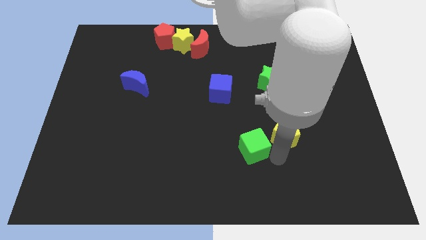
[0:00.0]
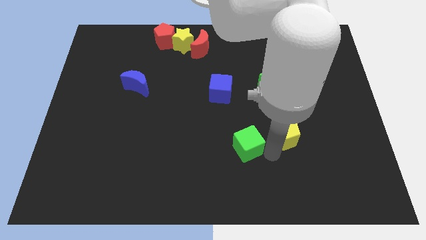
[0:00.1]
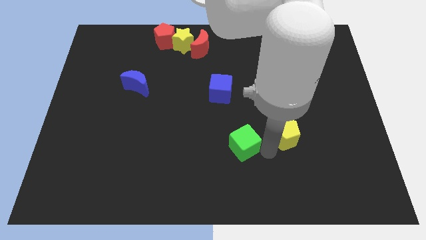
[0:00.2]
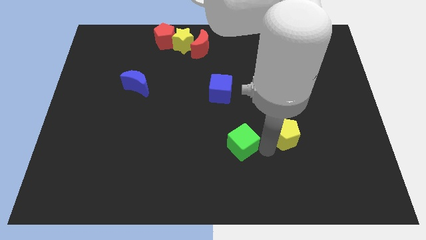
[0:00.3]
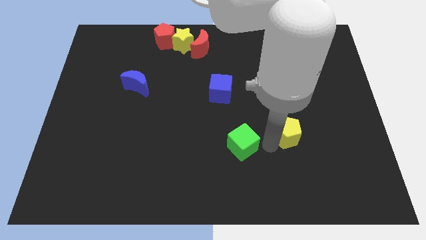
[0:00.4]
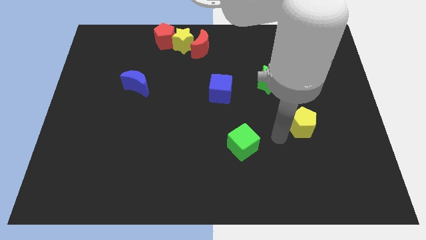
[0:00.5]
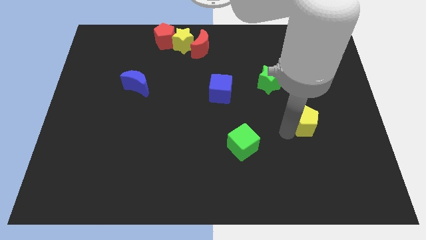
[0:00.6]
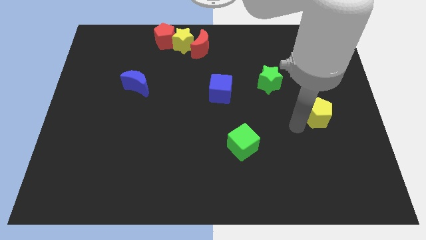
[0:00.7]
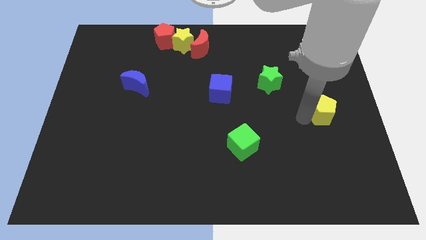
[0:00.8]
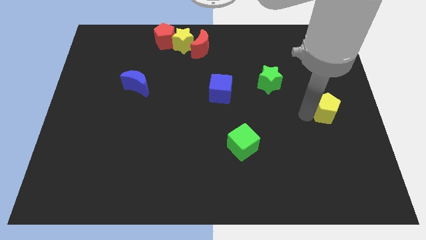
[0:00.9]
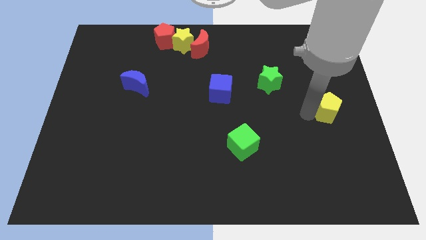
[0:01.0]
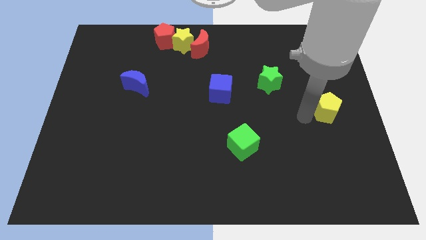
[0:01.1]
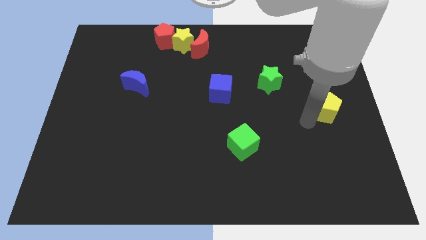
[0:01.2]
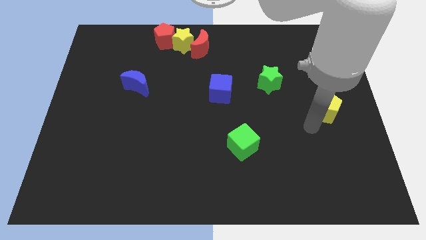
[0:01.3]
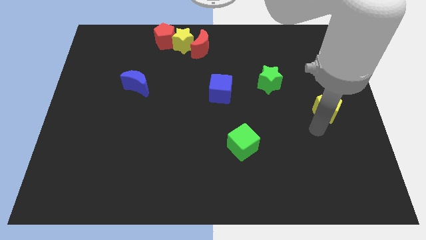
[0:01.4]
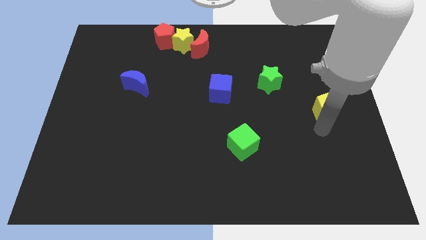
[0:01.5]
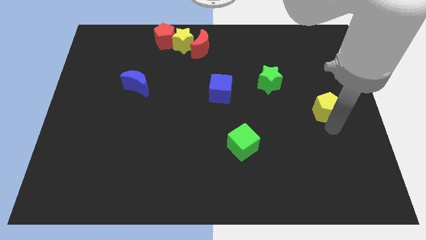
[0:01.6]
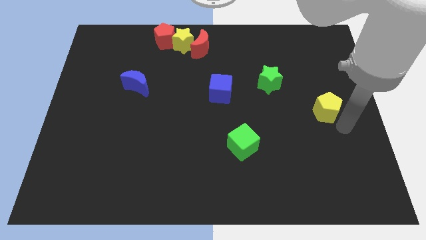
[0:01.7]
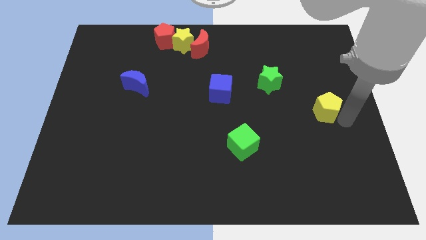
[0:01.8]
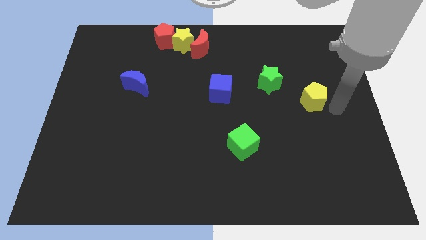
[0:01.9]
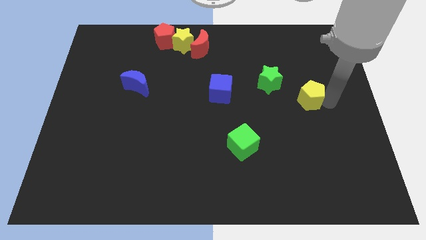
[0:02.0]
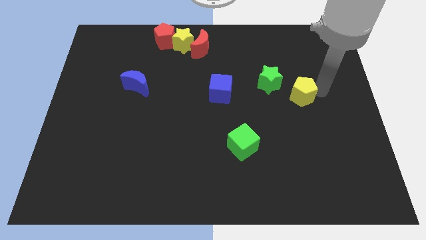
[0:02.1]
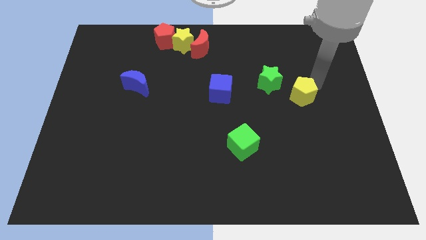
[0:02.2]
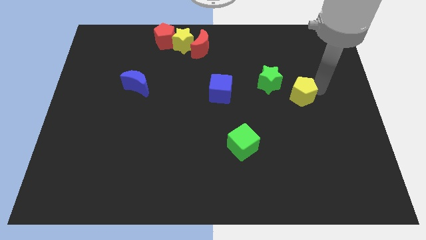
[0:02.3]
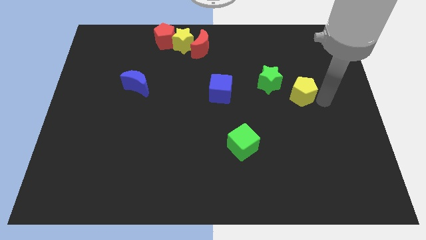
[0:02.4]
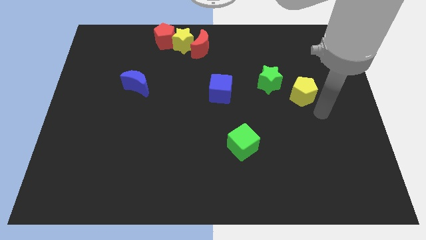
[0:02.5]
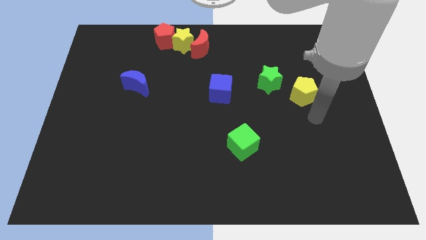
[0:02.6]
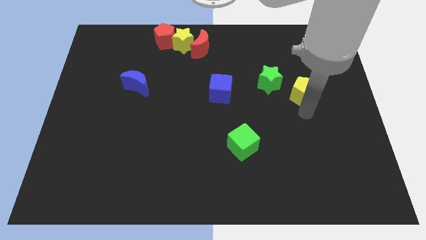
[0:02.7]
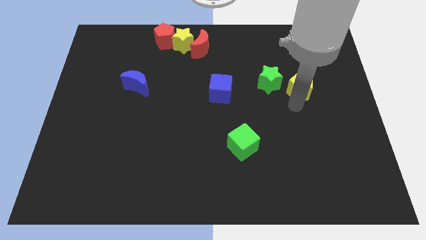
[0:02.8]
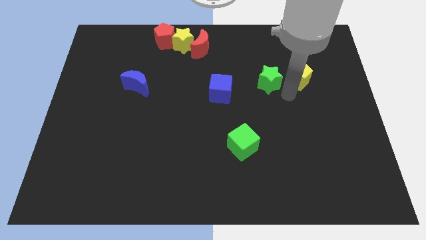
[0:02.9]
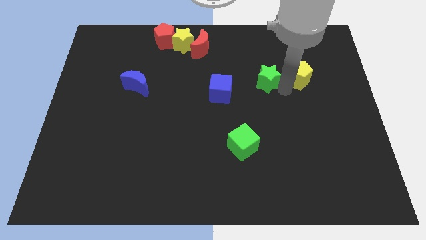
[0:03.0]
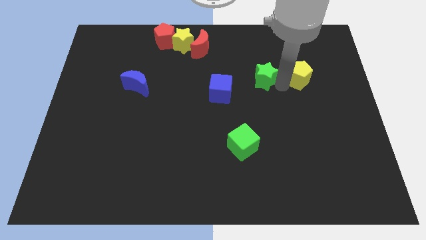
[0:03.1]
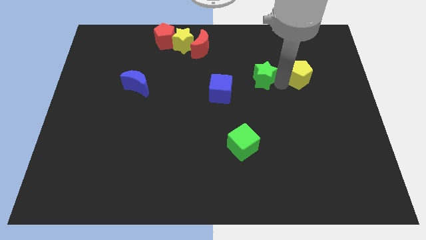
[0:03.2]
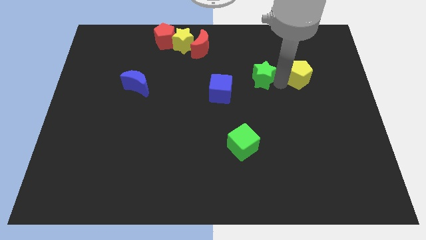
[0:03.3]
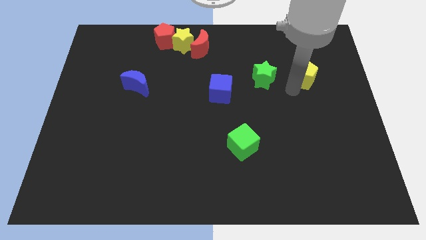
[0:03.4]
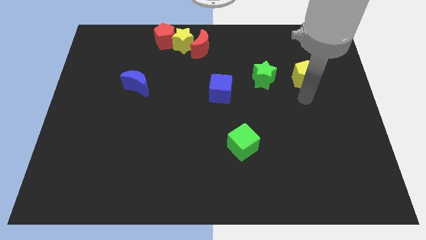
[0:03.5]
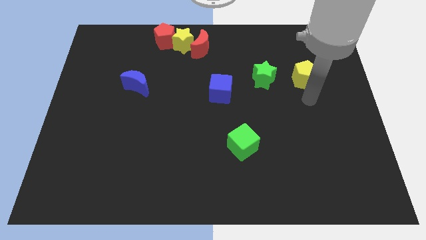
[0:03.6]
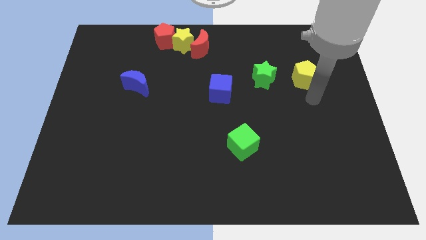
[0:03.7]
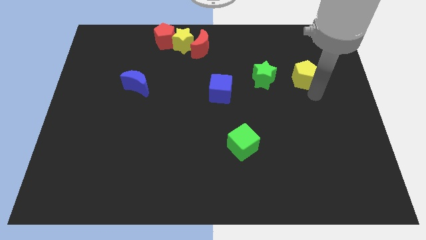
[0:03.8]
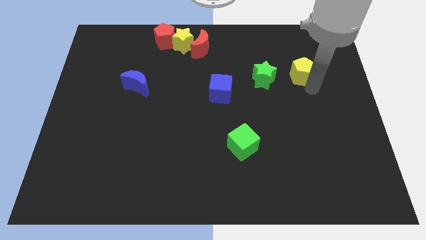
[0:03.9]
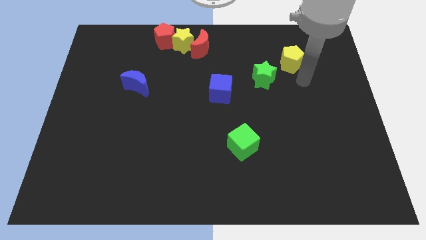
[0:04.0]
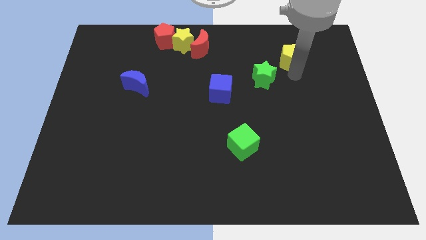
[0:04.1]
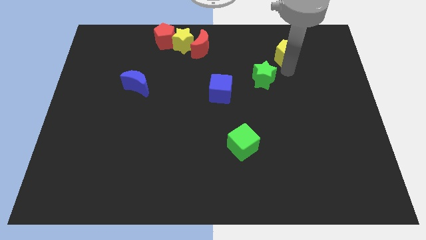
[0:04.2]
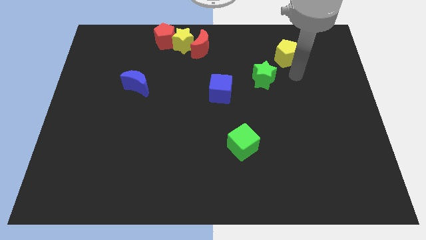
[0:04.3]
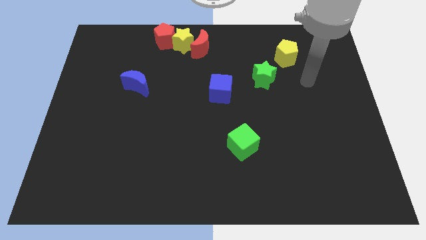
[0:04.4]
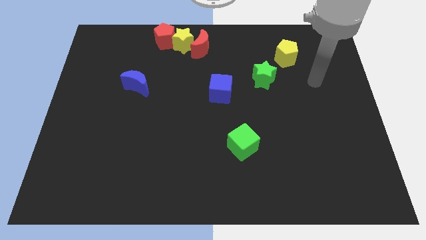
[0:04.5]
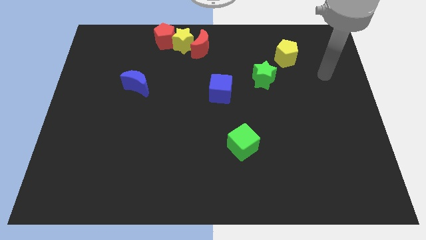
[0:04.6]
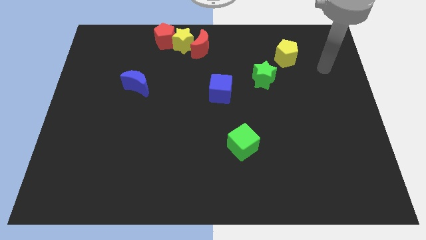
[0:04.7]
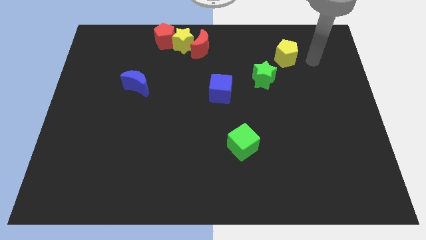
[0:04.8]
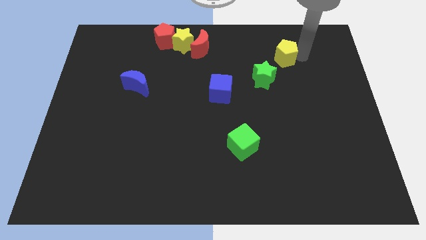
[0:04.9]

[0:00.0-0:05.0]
move the yellow pentagon towards the top side

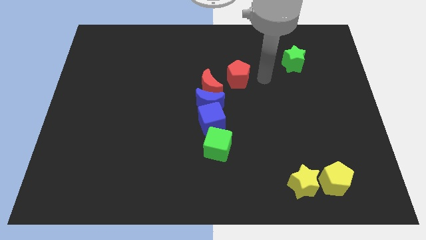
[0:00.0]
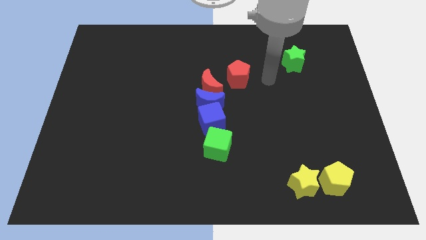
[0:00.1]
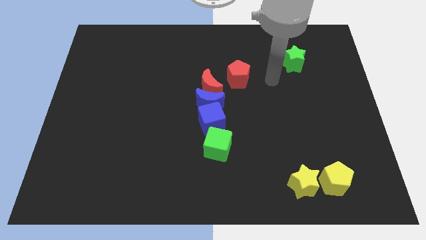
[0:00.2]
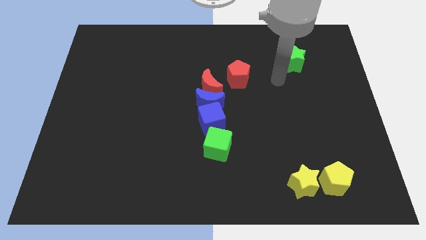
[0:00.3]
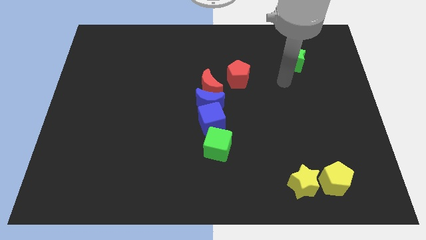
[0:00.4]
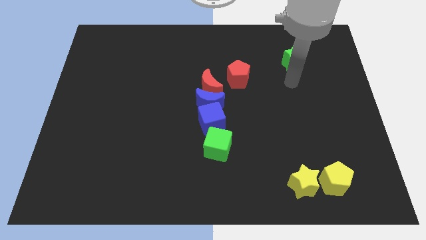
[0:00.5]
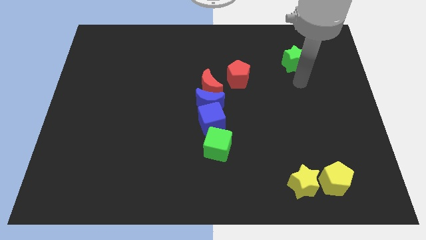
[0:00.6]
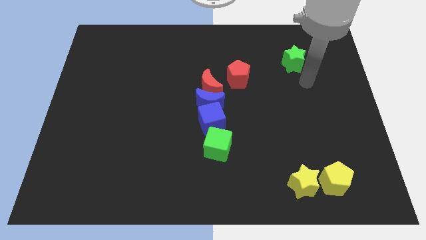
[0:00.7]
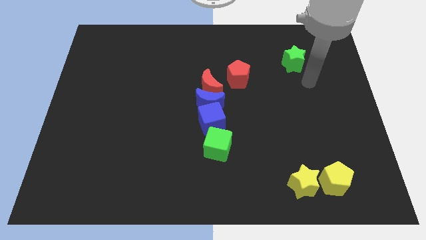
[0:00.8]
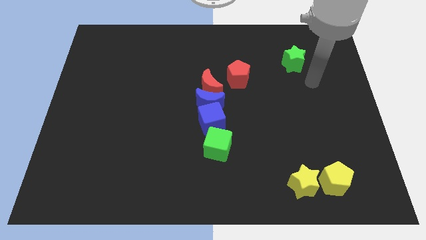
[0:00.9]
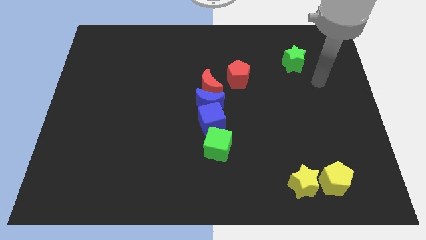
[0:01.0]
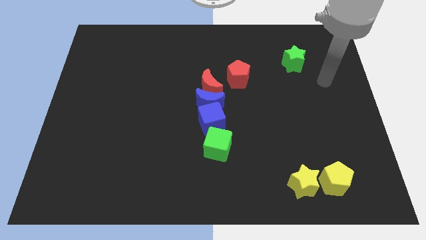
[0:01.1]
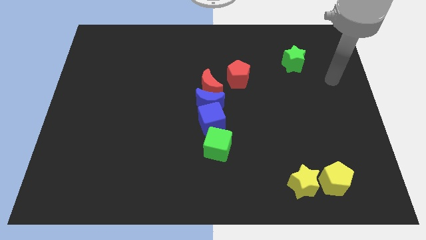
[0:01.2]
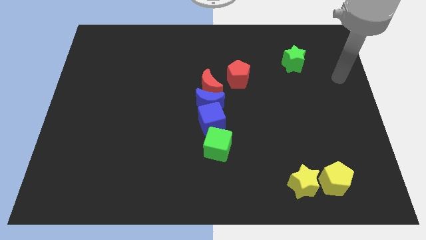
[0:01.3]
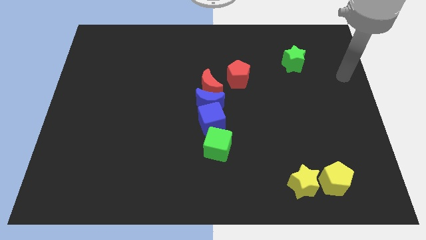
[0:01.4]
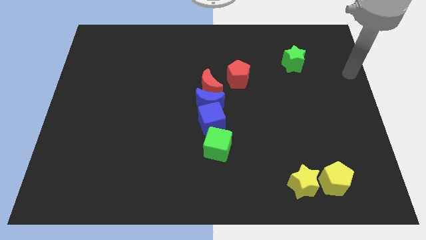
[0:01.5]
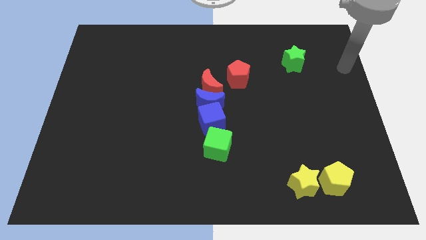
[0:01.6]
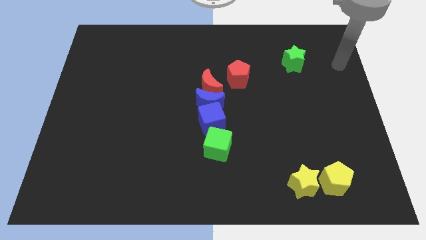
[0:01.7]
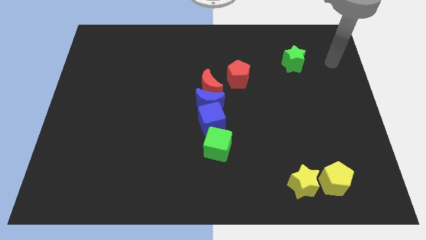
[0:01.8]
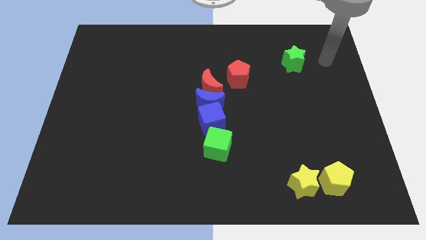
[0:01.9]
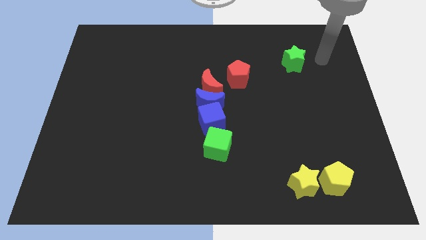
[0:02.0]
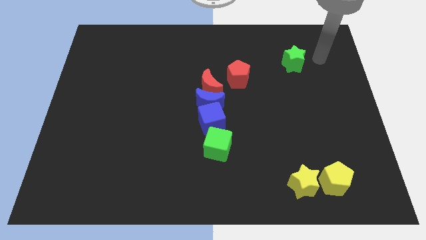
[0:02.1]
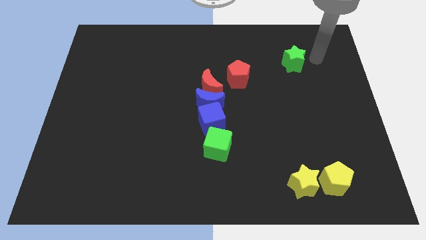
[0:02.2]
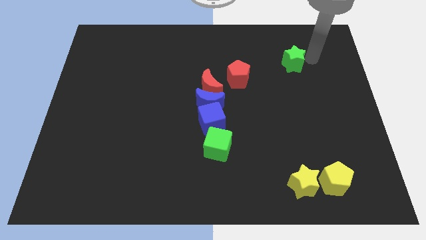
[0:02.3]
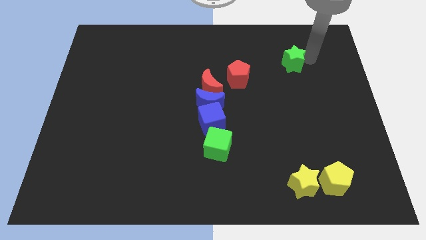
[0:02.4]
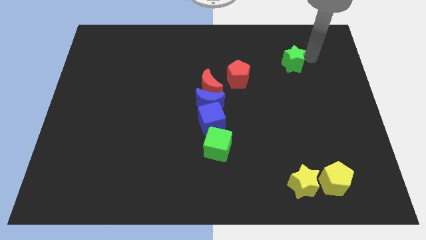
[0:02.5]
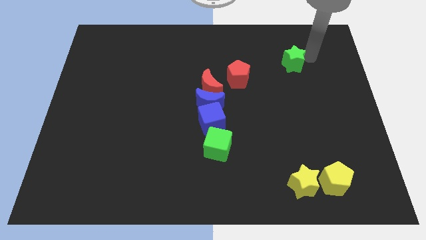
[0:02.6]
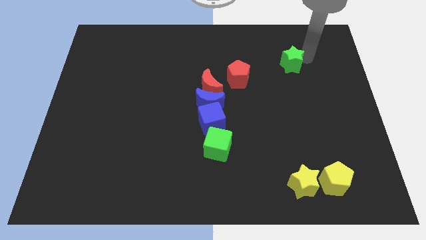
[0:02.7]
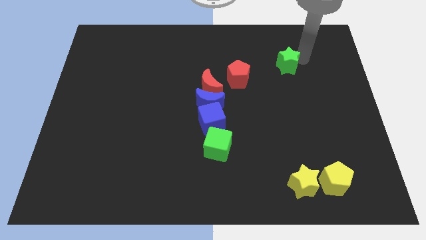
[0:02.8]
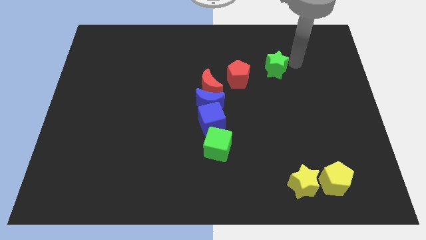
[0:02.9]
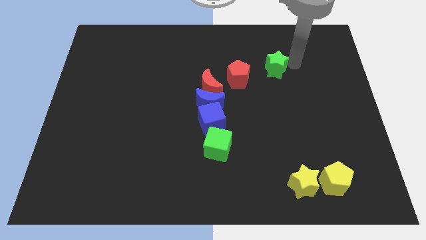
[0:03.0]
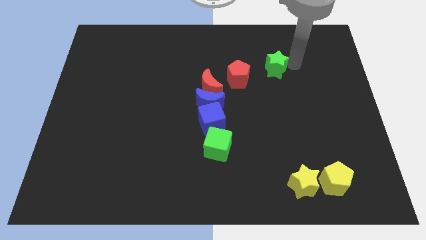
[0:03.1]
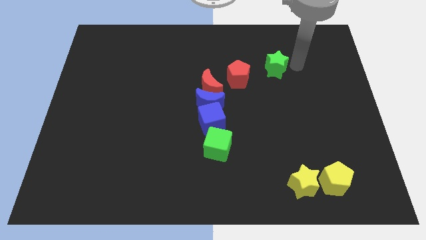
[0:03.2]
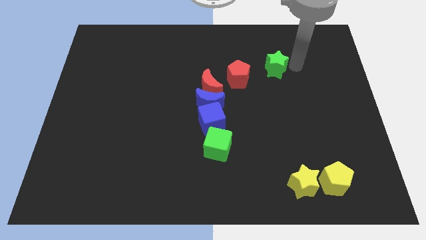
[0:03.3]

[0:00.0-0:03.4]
slightly push the green star to the left side of the board

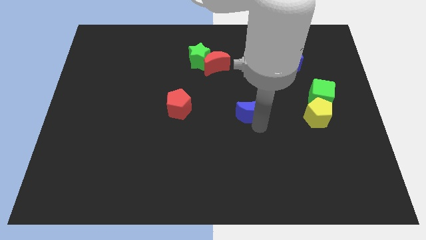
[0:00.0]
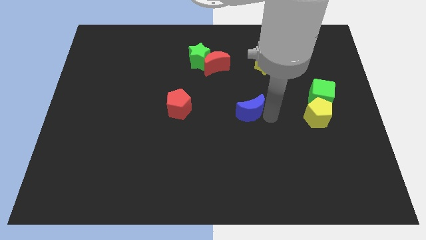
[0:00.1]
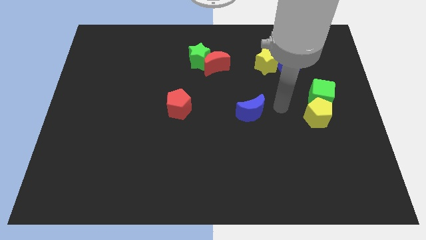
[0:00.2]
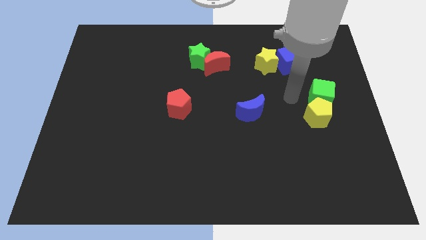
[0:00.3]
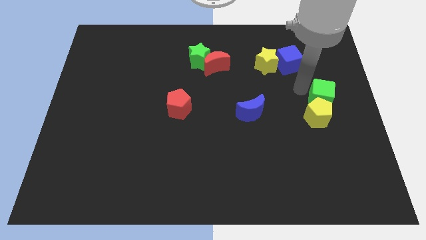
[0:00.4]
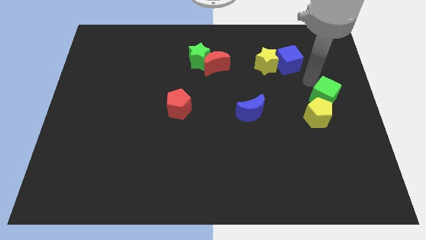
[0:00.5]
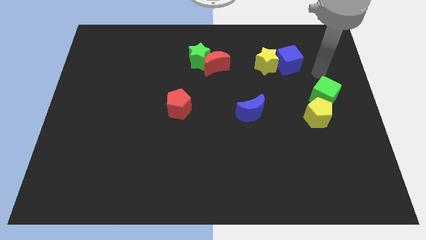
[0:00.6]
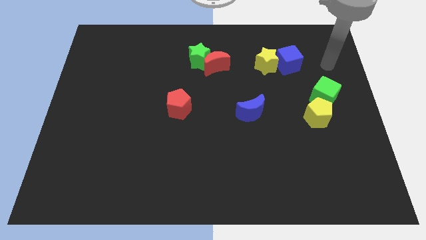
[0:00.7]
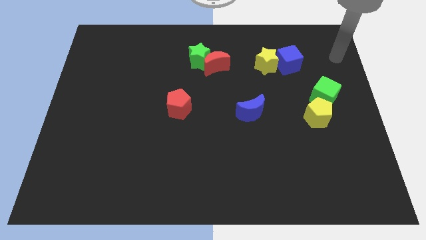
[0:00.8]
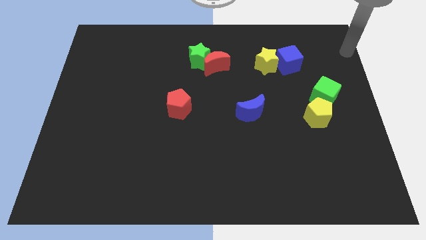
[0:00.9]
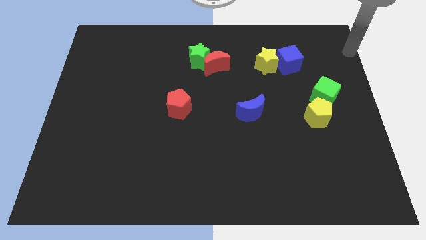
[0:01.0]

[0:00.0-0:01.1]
slightly tap the blue crescent and the green cube
